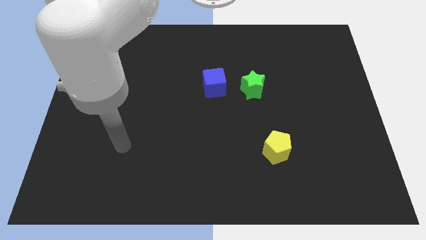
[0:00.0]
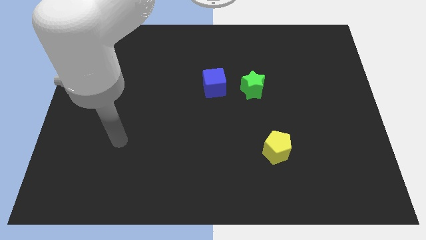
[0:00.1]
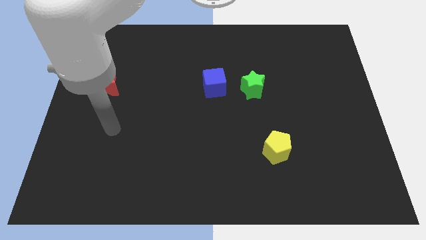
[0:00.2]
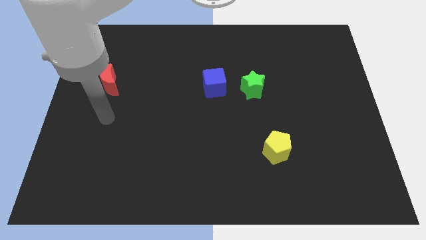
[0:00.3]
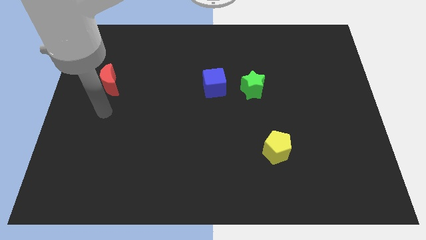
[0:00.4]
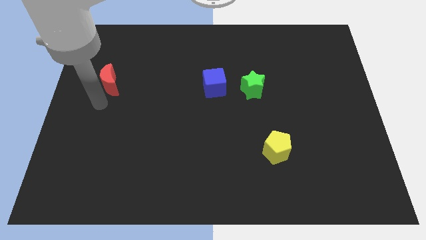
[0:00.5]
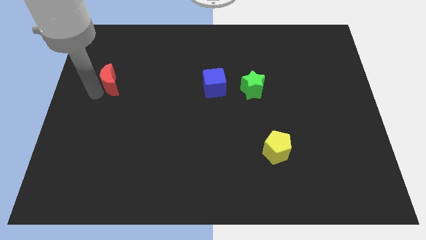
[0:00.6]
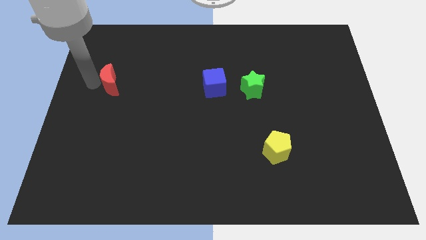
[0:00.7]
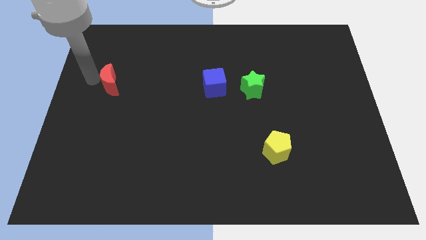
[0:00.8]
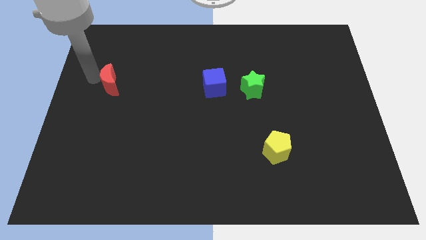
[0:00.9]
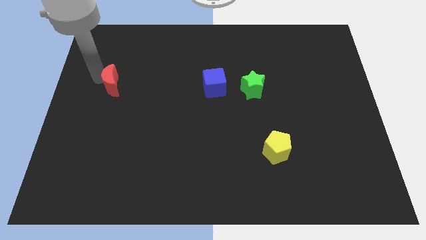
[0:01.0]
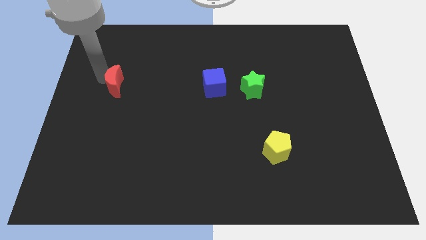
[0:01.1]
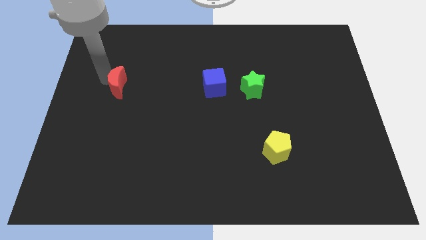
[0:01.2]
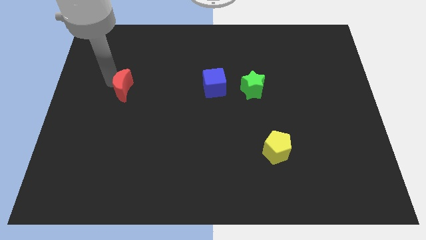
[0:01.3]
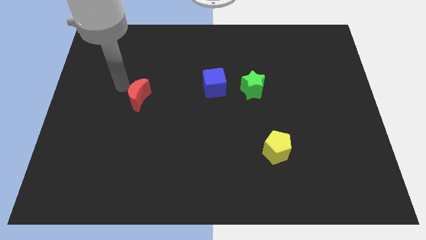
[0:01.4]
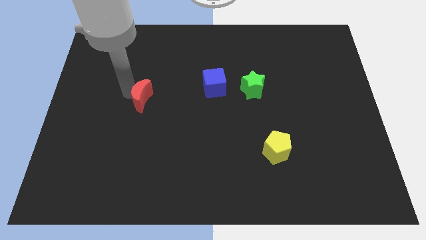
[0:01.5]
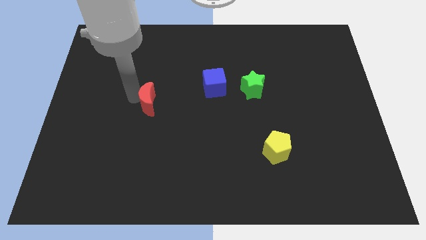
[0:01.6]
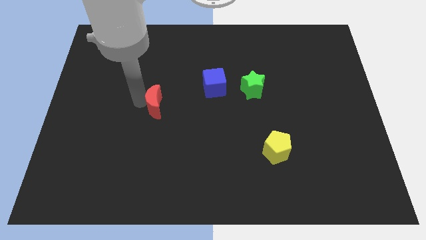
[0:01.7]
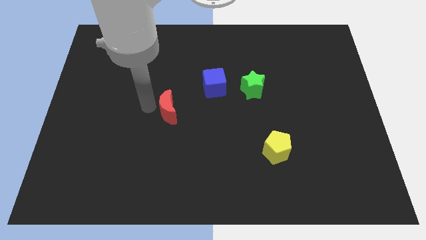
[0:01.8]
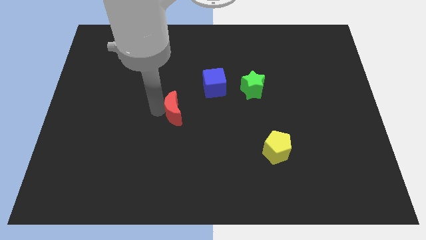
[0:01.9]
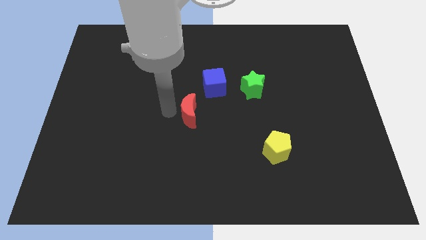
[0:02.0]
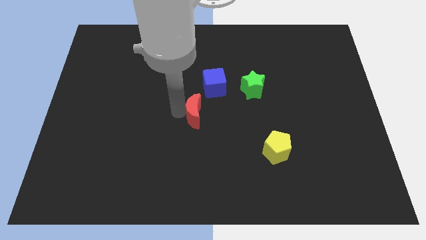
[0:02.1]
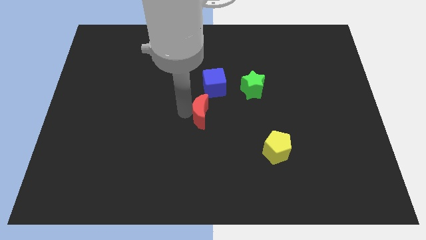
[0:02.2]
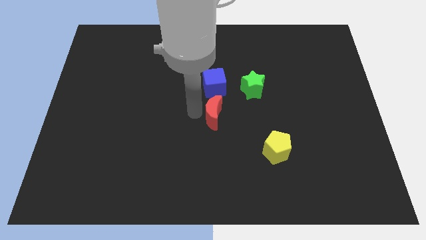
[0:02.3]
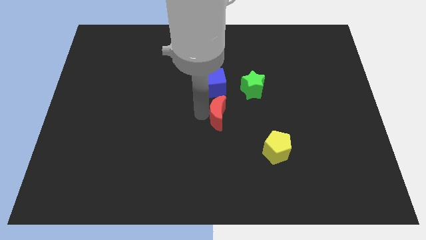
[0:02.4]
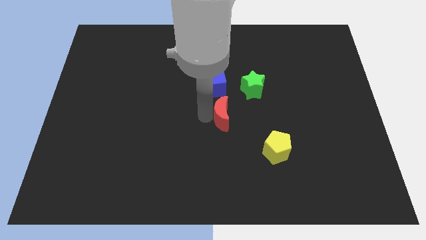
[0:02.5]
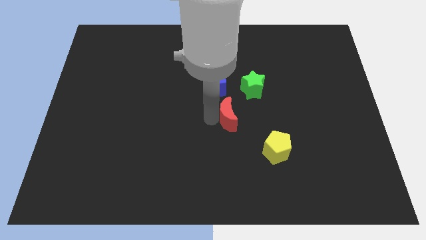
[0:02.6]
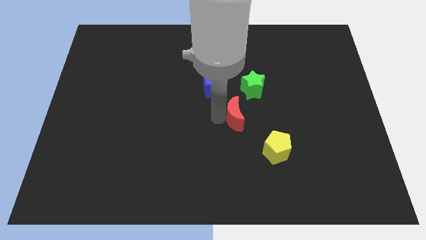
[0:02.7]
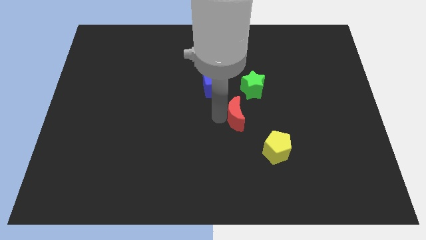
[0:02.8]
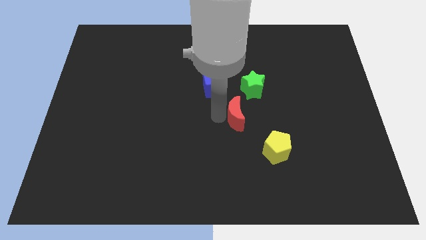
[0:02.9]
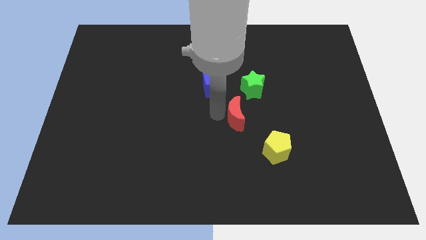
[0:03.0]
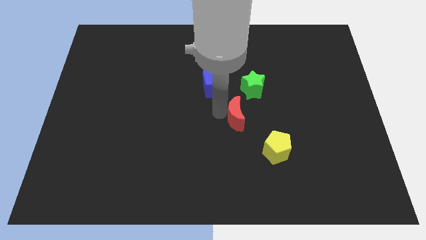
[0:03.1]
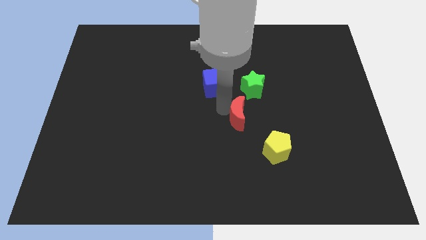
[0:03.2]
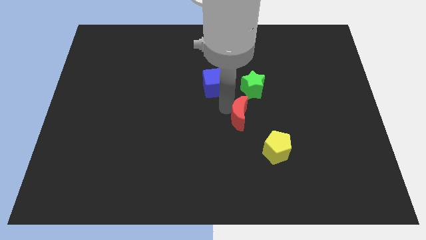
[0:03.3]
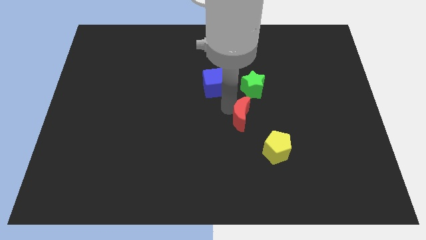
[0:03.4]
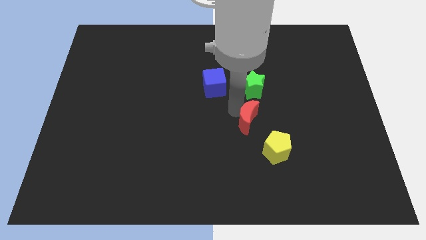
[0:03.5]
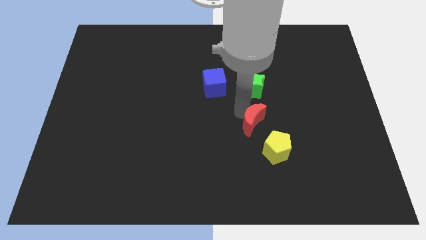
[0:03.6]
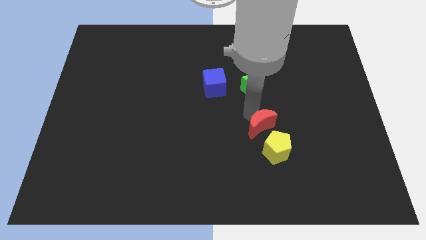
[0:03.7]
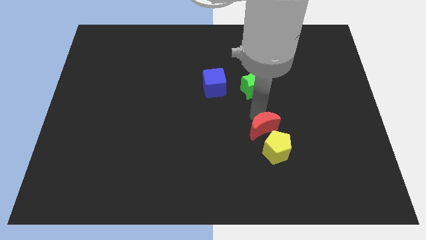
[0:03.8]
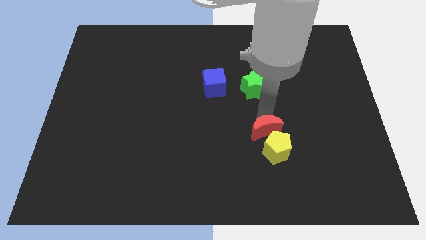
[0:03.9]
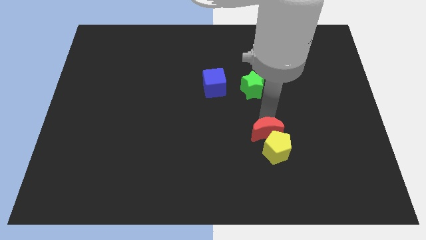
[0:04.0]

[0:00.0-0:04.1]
move the red moon next to the pentagon

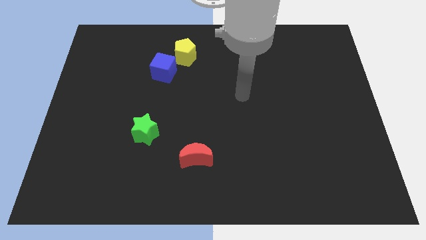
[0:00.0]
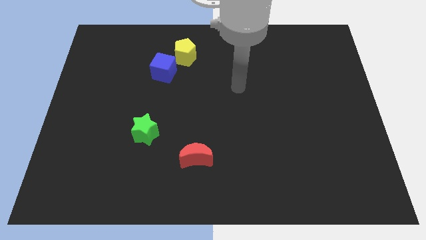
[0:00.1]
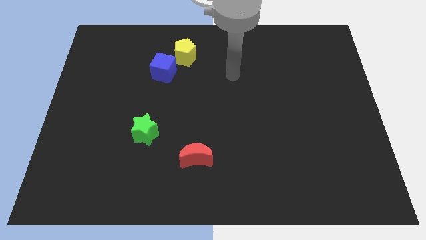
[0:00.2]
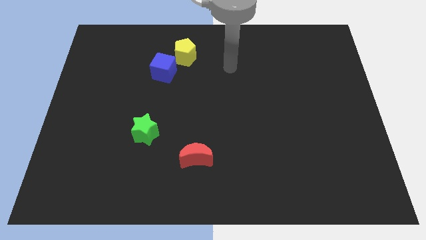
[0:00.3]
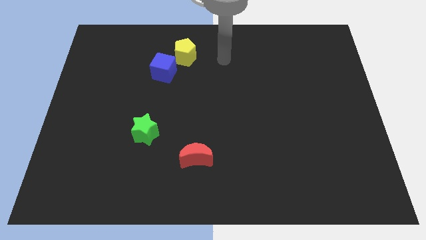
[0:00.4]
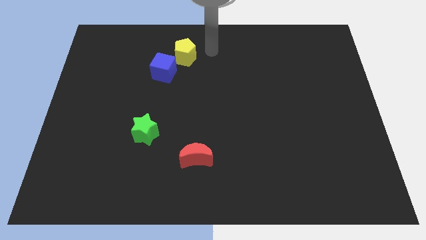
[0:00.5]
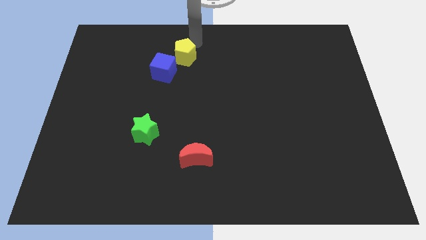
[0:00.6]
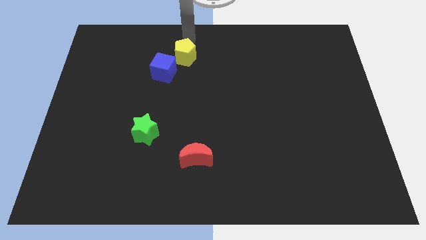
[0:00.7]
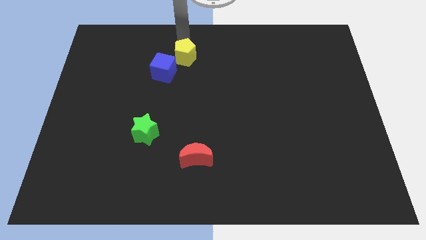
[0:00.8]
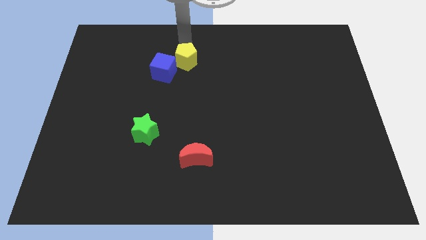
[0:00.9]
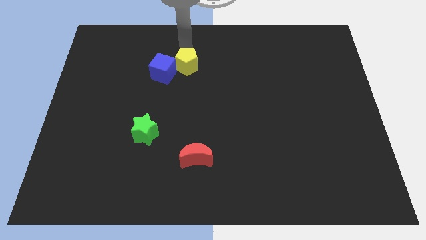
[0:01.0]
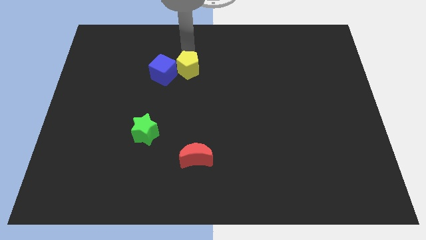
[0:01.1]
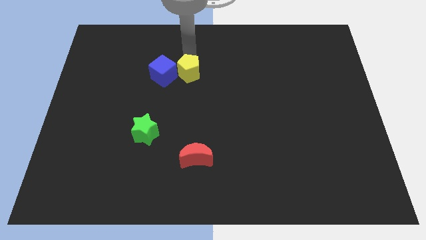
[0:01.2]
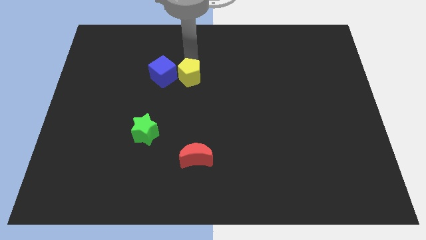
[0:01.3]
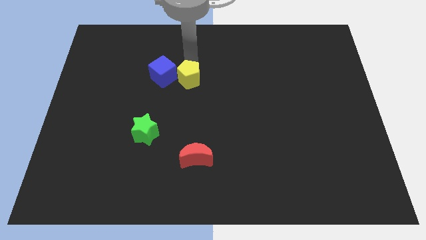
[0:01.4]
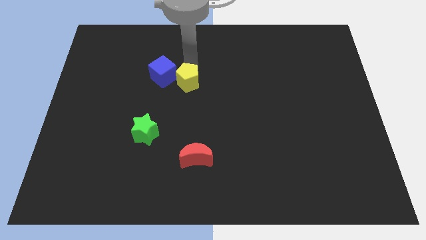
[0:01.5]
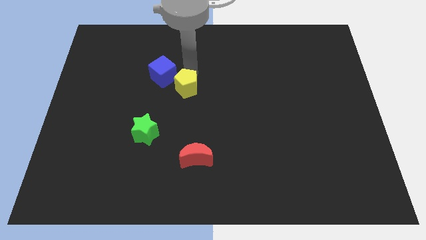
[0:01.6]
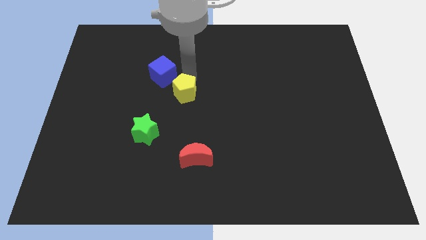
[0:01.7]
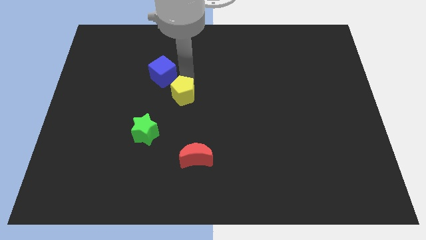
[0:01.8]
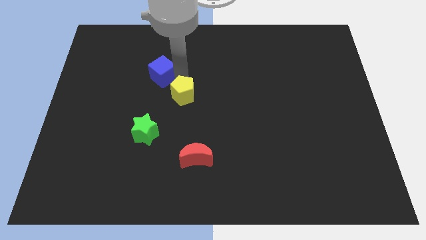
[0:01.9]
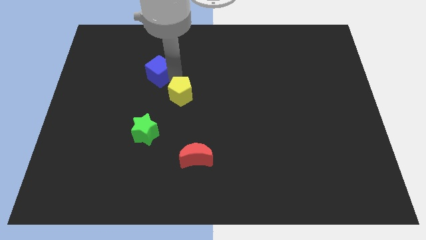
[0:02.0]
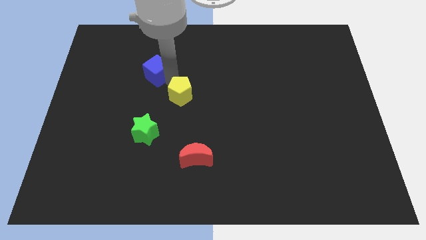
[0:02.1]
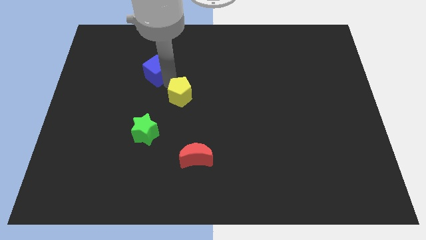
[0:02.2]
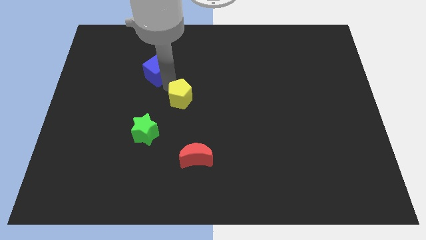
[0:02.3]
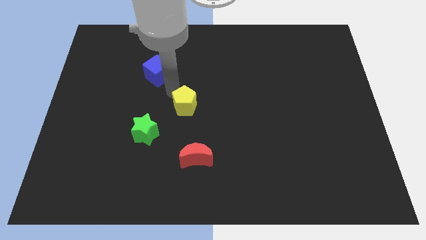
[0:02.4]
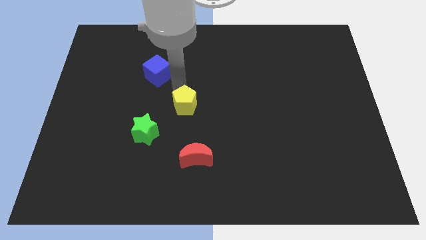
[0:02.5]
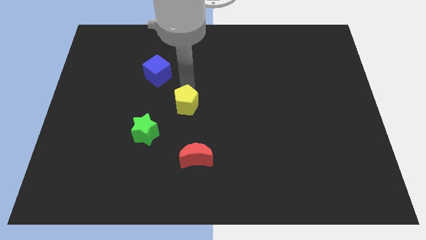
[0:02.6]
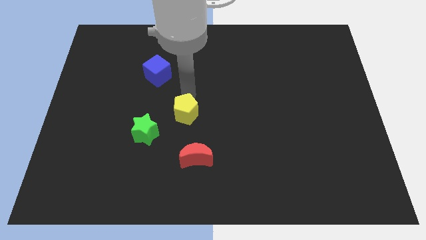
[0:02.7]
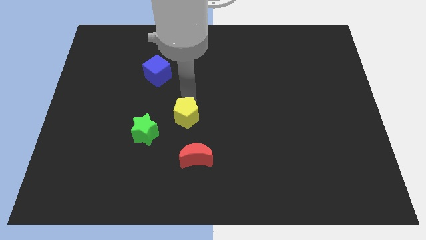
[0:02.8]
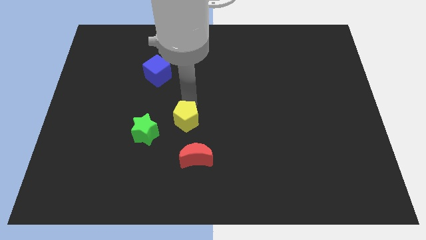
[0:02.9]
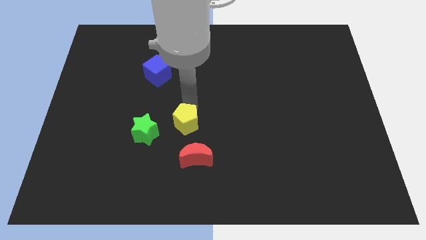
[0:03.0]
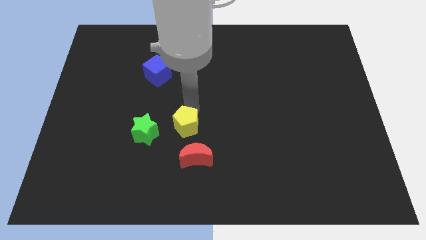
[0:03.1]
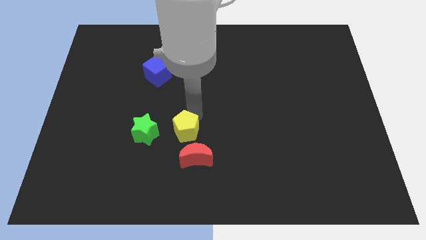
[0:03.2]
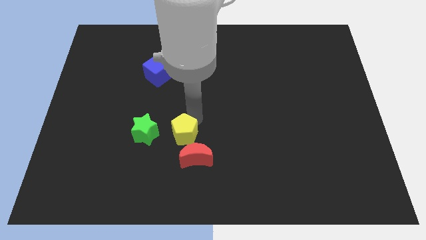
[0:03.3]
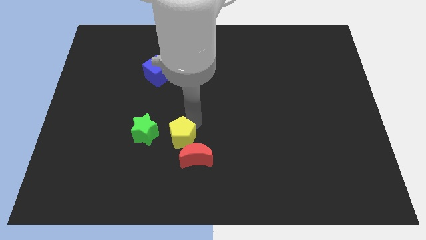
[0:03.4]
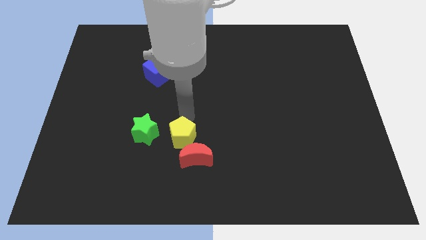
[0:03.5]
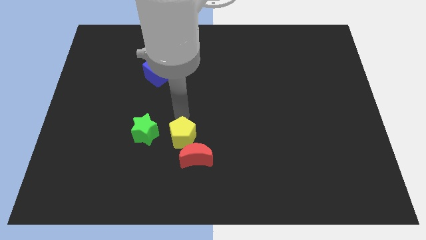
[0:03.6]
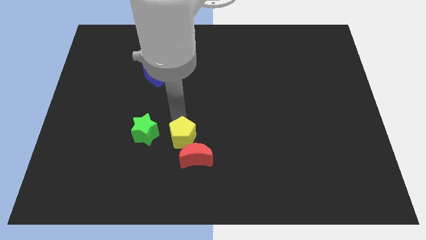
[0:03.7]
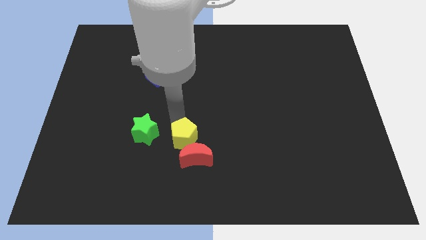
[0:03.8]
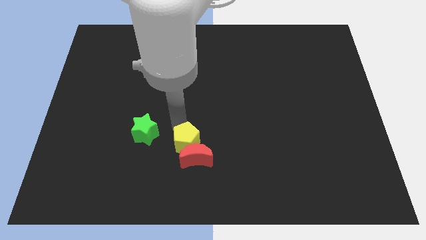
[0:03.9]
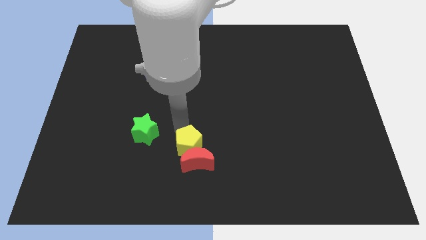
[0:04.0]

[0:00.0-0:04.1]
move the yellow pentagon to the red block

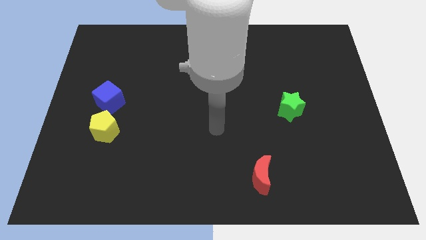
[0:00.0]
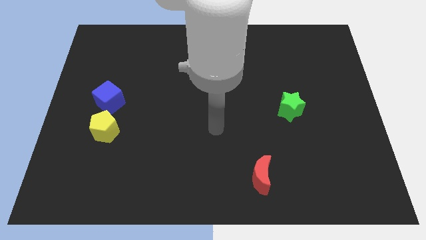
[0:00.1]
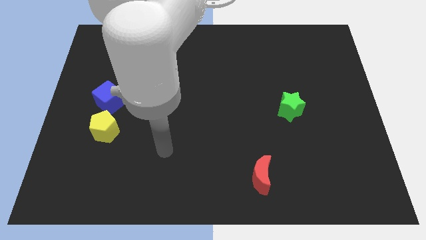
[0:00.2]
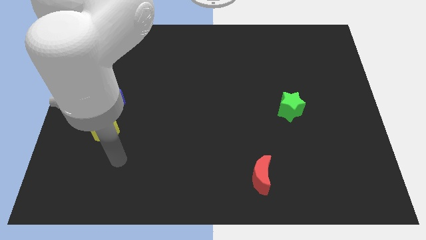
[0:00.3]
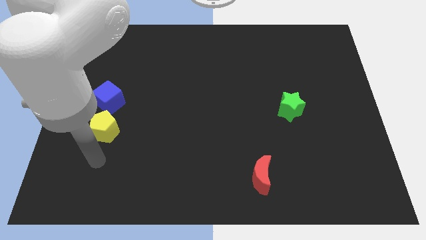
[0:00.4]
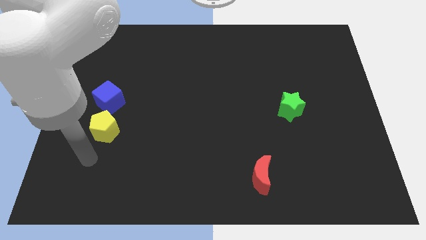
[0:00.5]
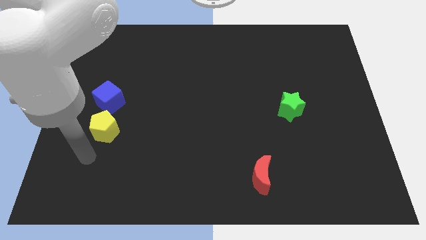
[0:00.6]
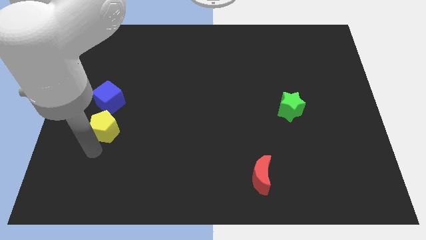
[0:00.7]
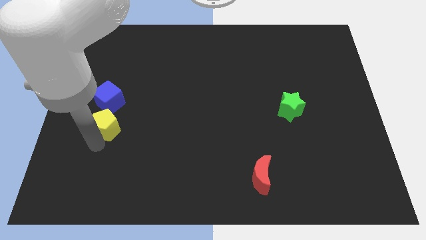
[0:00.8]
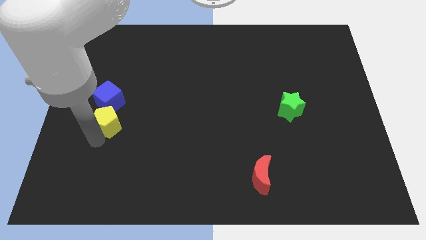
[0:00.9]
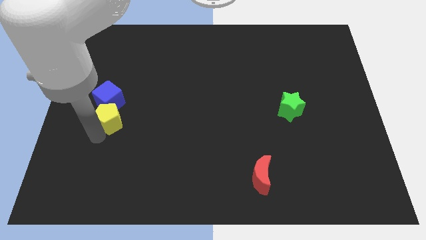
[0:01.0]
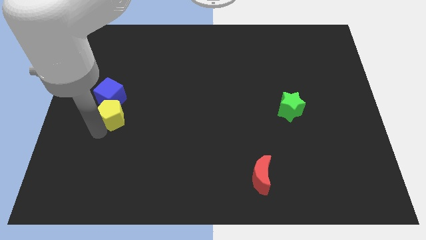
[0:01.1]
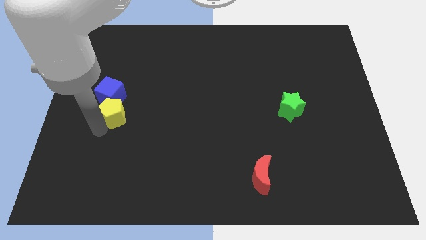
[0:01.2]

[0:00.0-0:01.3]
push the yellow pentagon to the cube
